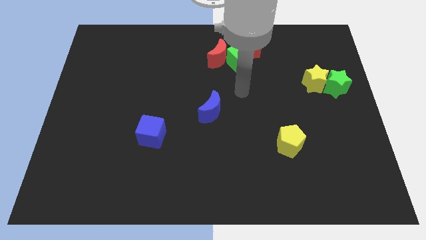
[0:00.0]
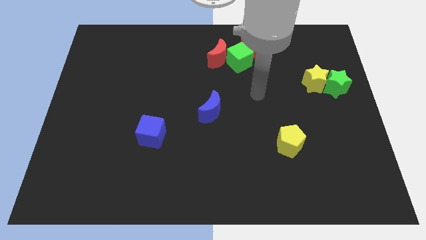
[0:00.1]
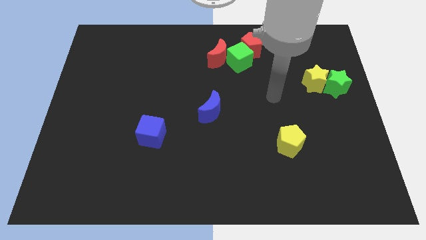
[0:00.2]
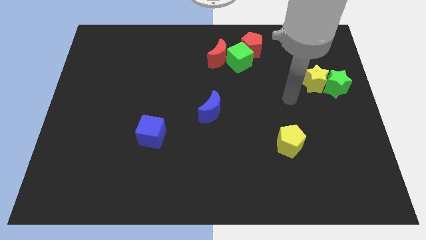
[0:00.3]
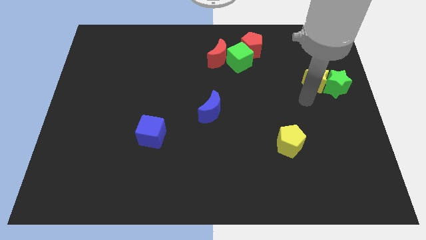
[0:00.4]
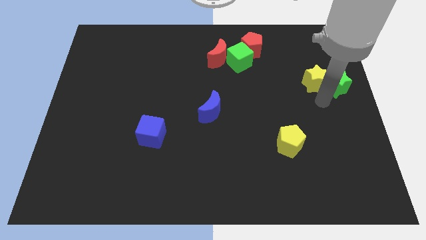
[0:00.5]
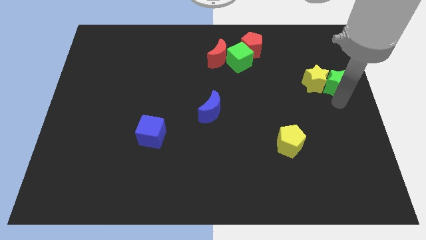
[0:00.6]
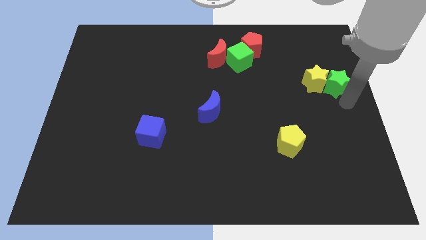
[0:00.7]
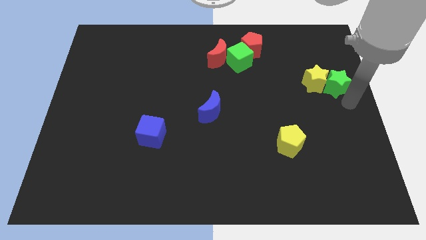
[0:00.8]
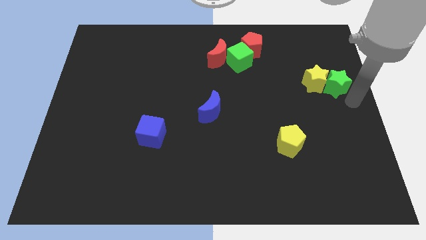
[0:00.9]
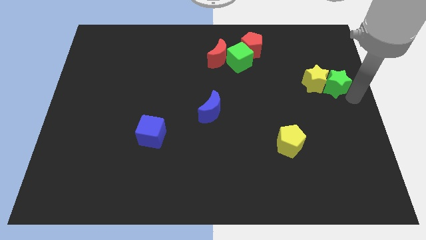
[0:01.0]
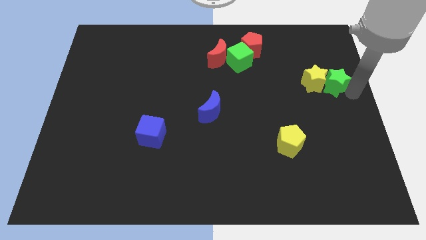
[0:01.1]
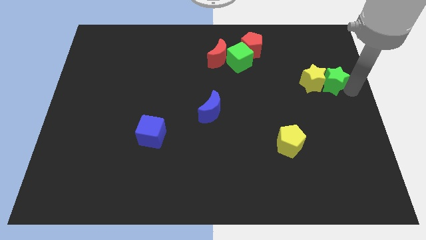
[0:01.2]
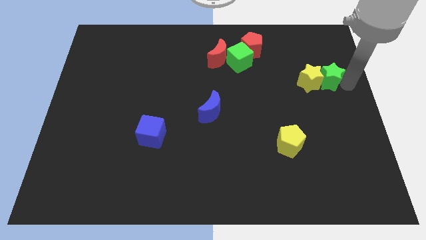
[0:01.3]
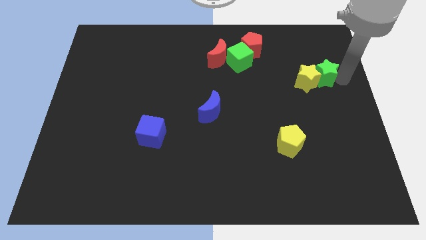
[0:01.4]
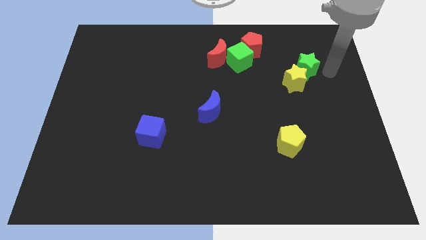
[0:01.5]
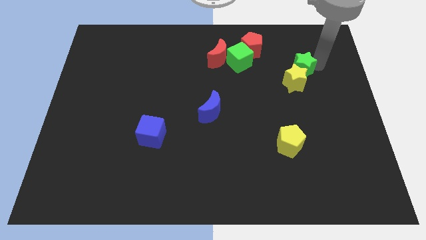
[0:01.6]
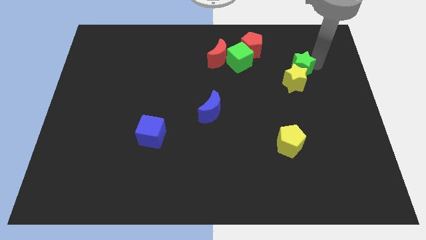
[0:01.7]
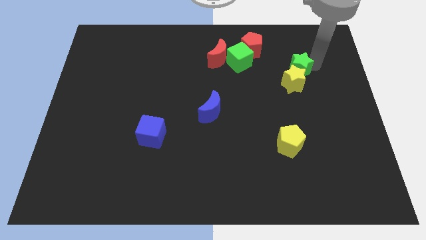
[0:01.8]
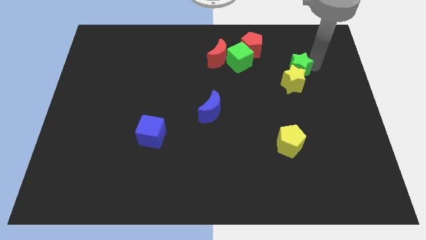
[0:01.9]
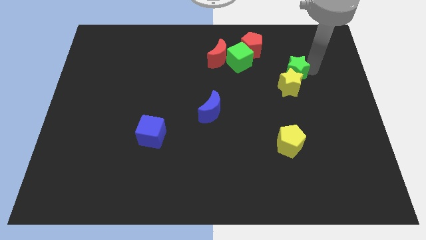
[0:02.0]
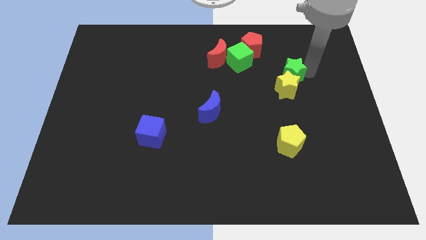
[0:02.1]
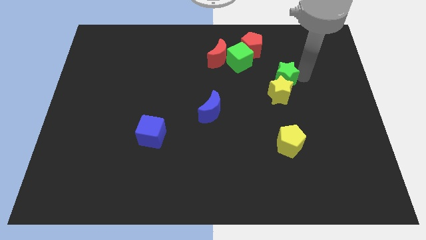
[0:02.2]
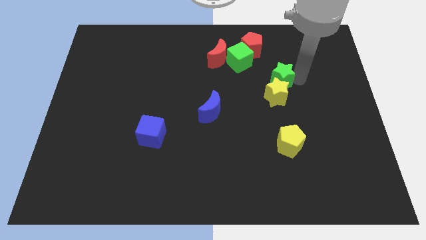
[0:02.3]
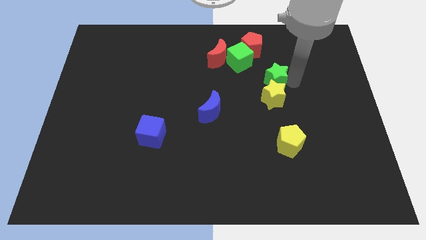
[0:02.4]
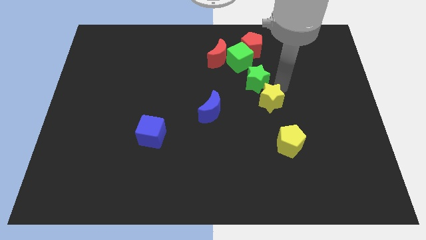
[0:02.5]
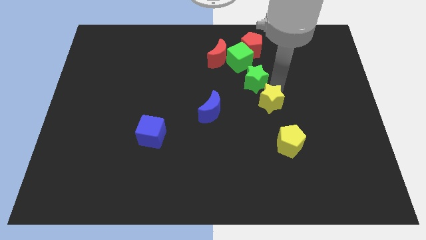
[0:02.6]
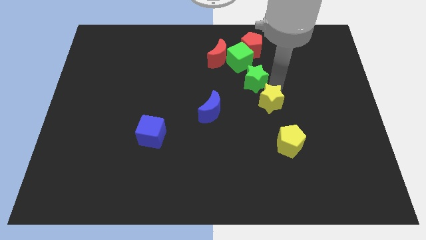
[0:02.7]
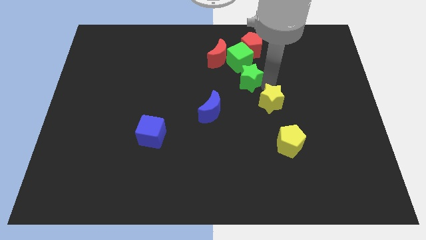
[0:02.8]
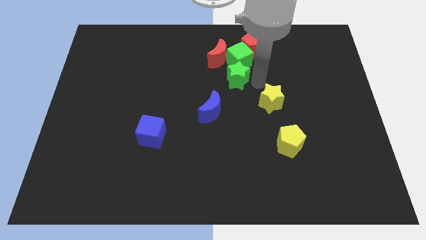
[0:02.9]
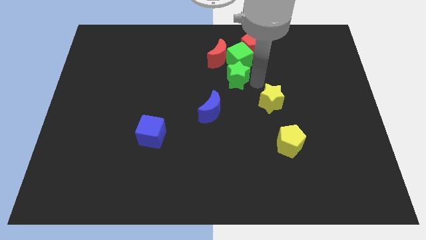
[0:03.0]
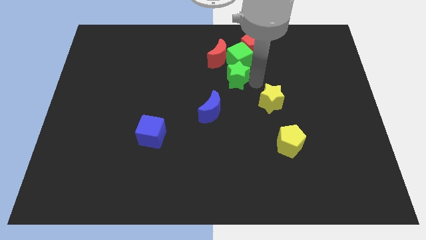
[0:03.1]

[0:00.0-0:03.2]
move green star diagonally top left to the yellow star

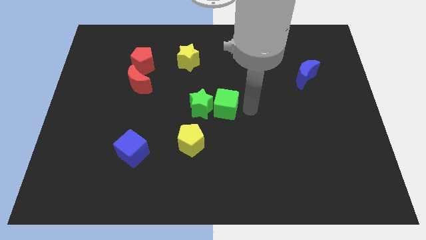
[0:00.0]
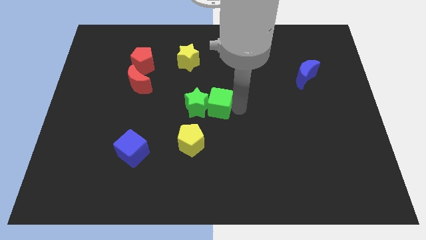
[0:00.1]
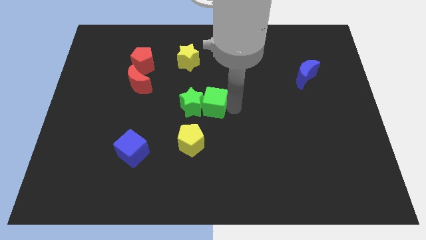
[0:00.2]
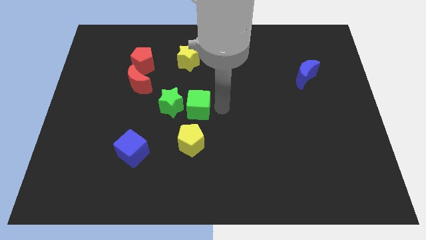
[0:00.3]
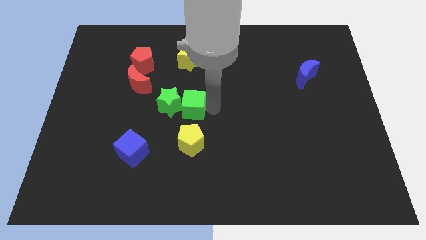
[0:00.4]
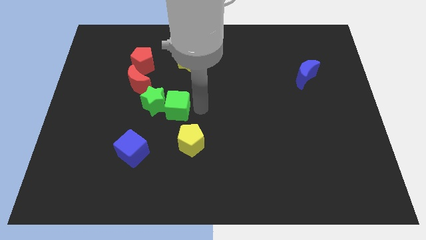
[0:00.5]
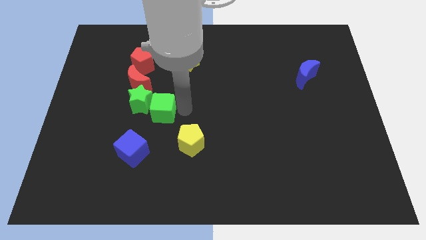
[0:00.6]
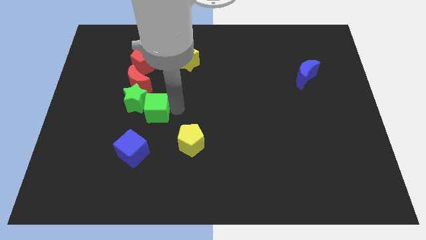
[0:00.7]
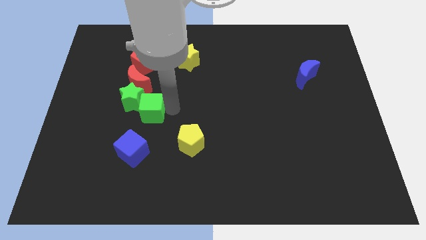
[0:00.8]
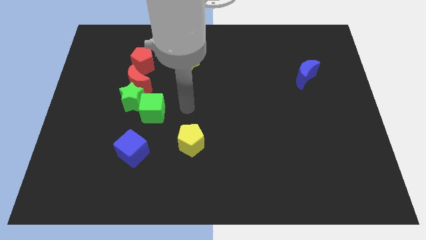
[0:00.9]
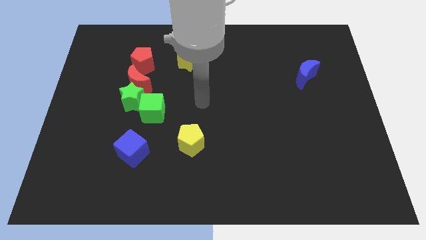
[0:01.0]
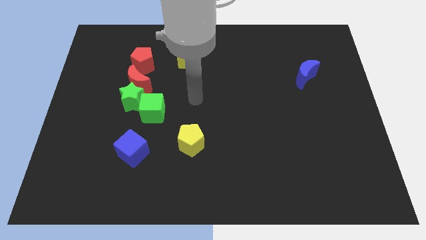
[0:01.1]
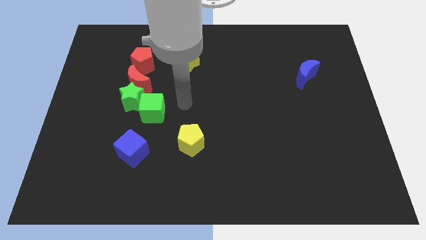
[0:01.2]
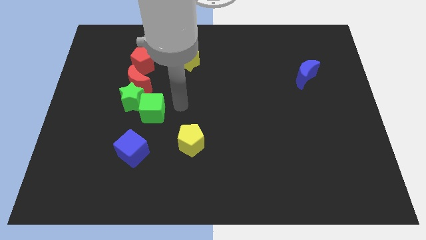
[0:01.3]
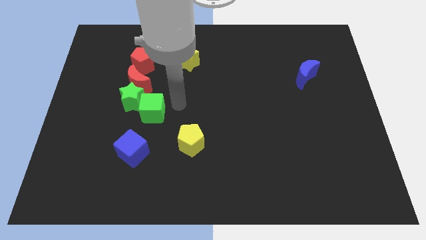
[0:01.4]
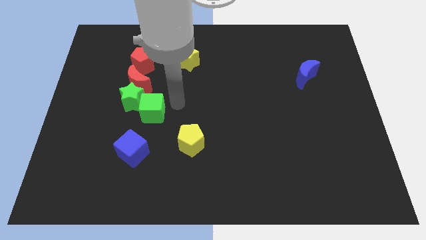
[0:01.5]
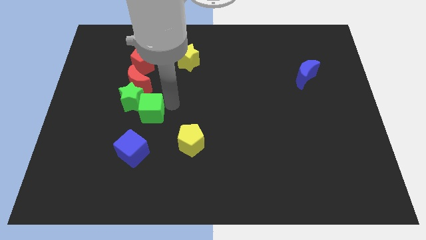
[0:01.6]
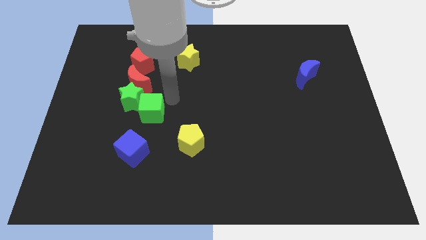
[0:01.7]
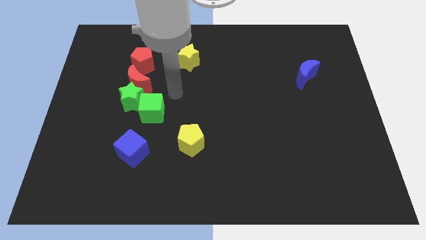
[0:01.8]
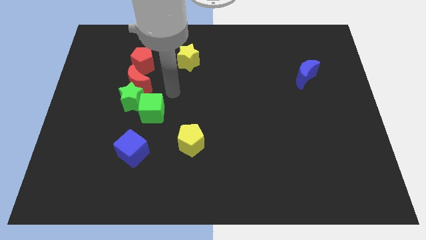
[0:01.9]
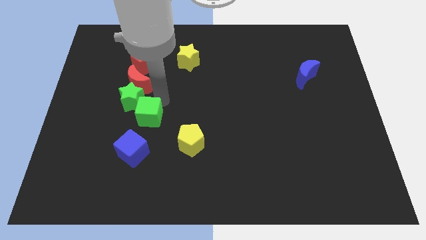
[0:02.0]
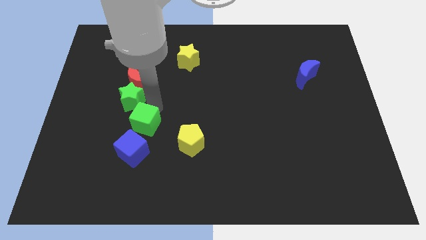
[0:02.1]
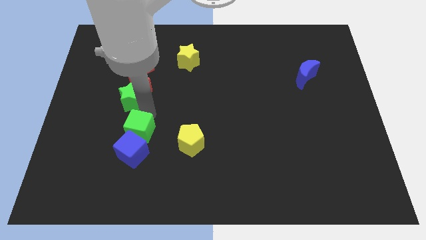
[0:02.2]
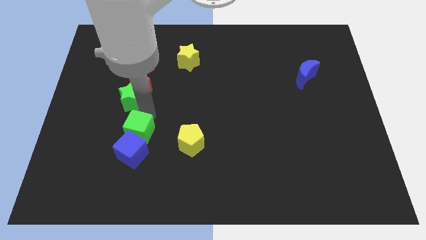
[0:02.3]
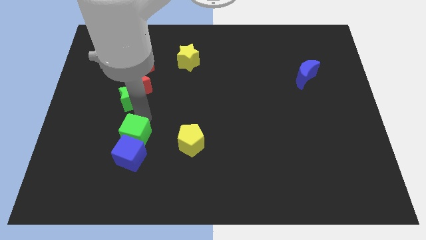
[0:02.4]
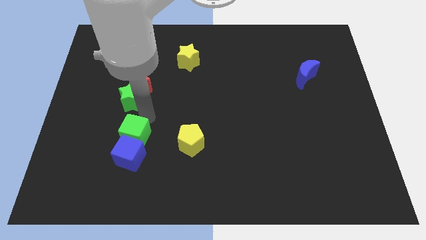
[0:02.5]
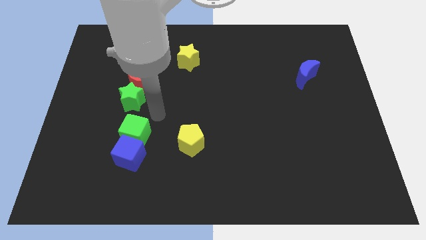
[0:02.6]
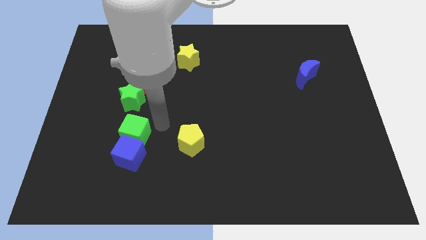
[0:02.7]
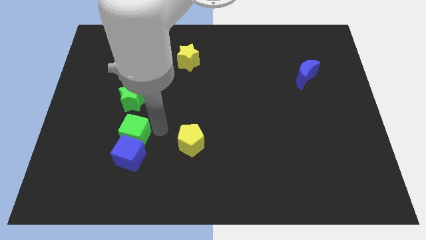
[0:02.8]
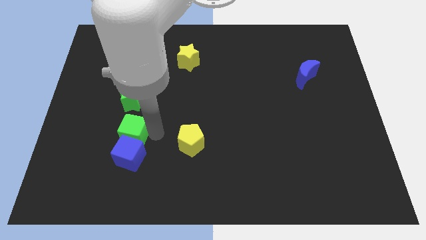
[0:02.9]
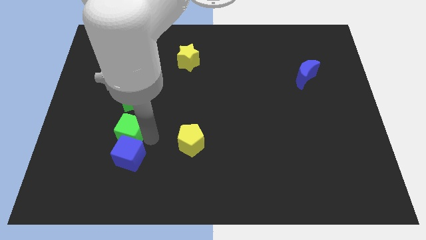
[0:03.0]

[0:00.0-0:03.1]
move the green cube and green star to the top side of the blue cube

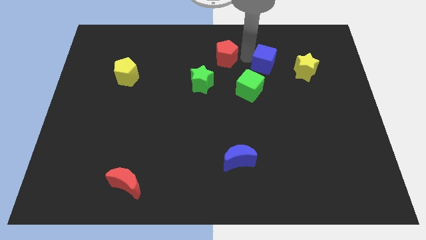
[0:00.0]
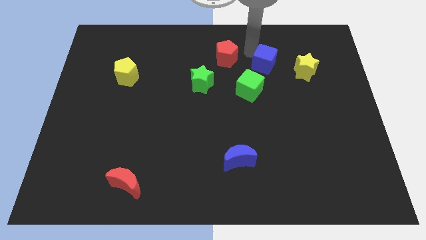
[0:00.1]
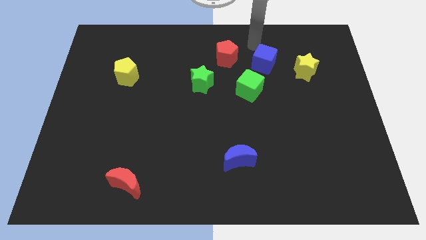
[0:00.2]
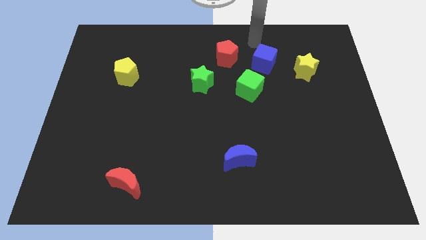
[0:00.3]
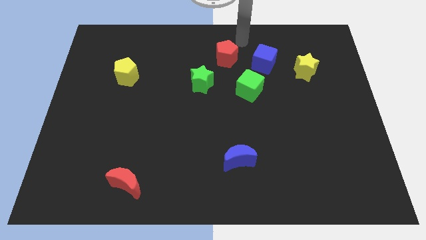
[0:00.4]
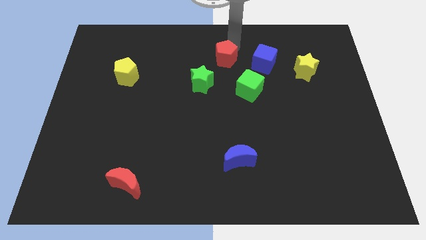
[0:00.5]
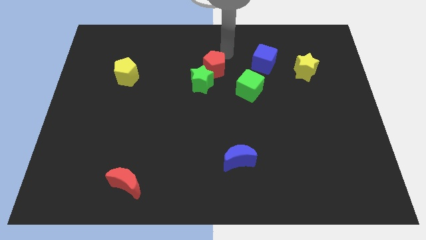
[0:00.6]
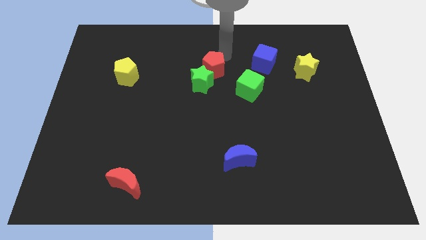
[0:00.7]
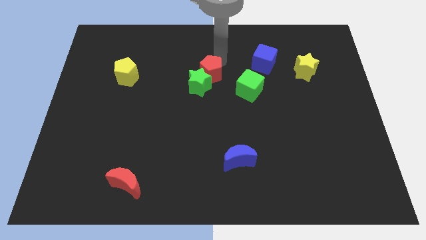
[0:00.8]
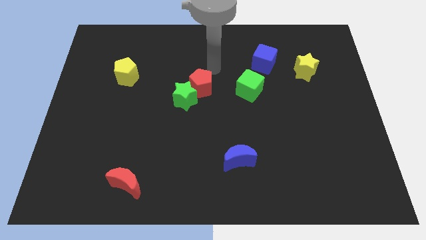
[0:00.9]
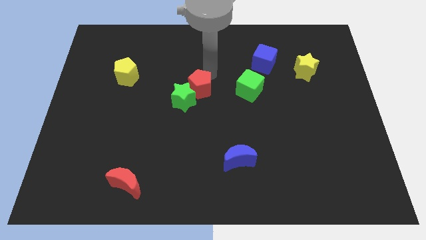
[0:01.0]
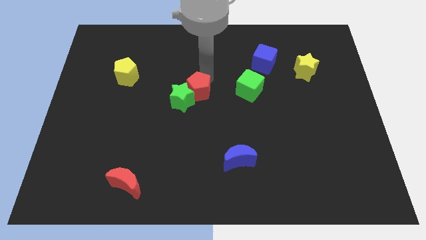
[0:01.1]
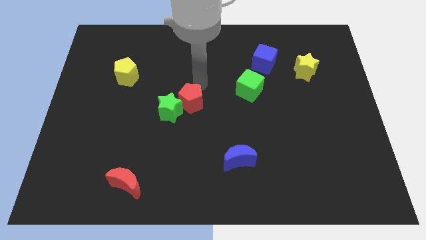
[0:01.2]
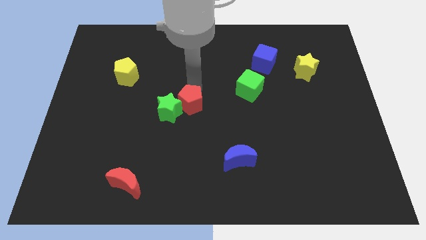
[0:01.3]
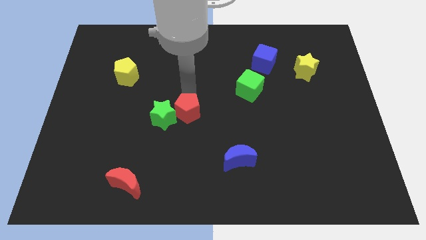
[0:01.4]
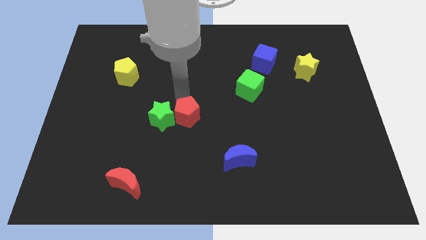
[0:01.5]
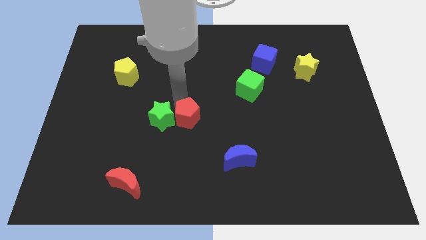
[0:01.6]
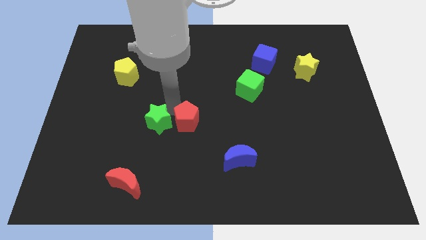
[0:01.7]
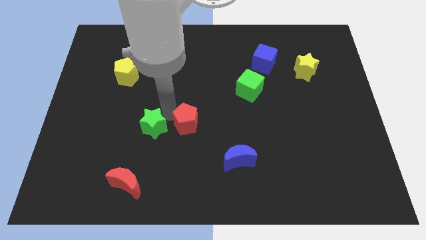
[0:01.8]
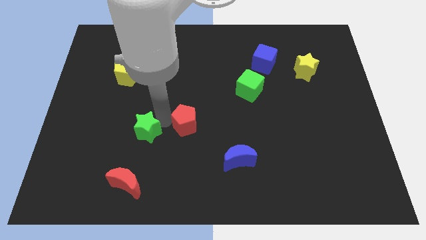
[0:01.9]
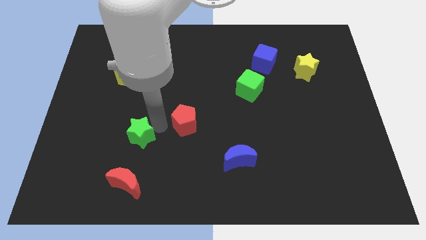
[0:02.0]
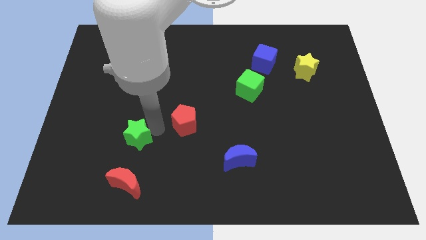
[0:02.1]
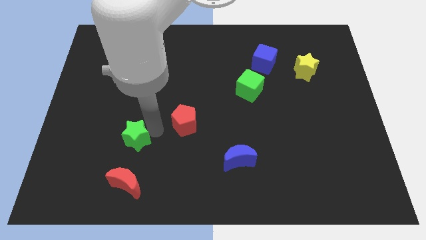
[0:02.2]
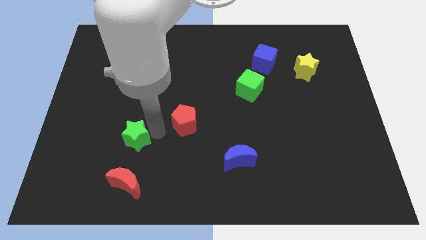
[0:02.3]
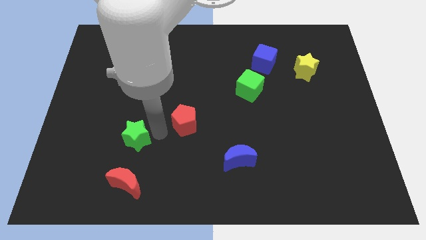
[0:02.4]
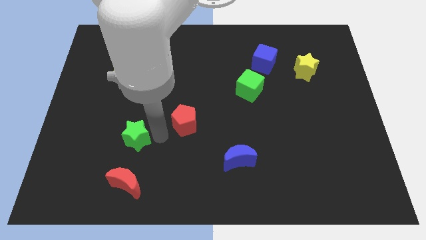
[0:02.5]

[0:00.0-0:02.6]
place the red pentagon at the top left of the blue moon
